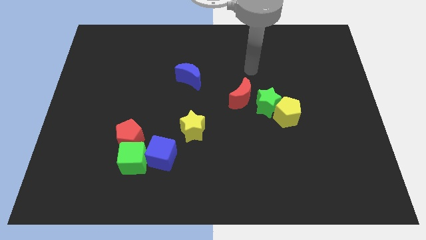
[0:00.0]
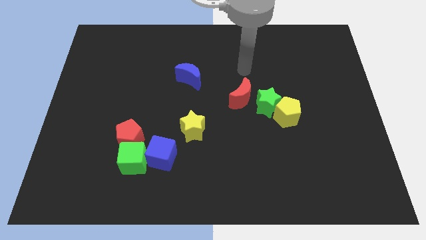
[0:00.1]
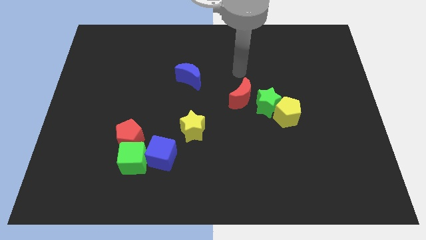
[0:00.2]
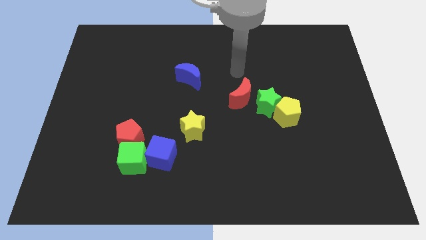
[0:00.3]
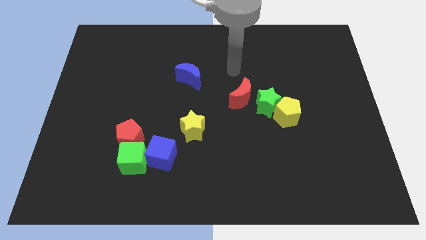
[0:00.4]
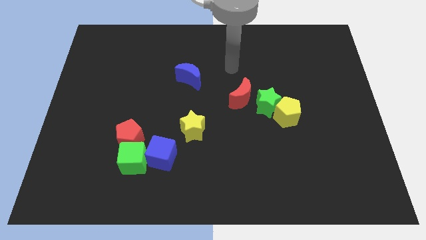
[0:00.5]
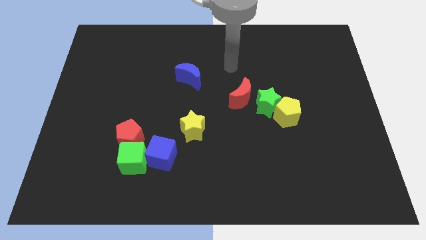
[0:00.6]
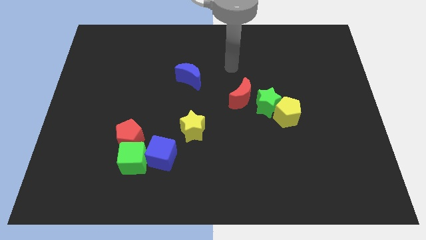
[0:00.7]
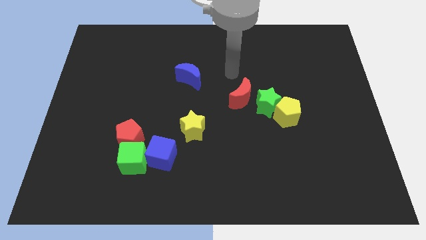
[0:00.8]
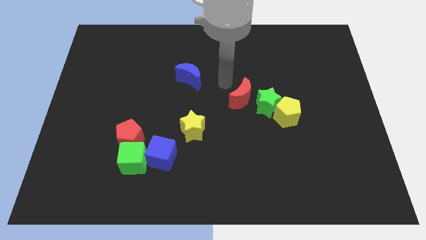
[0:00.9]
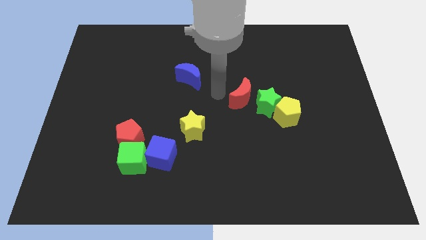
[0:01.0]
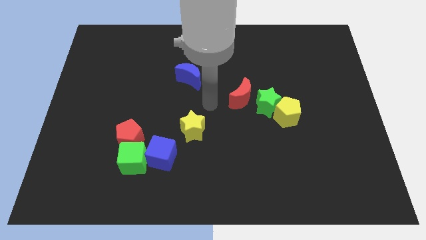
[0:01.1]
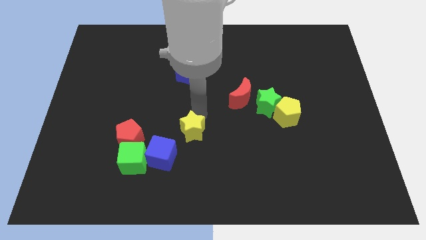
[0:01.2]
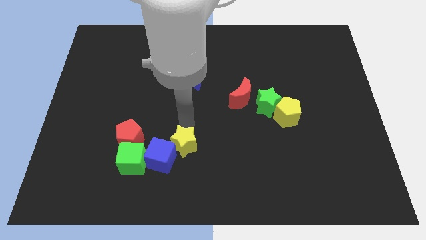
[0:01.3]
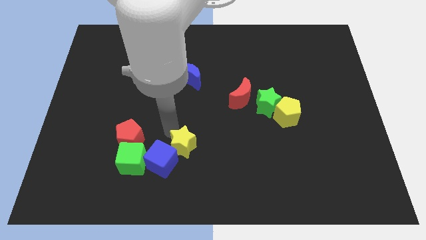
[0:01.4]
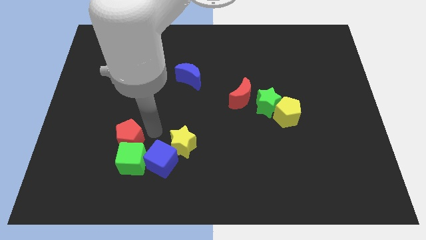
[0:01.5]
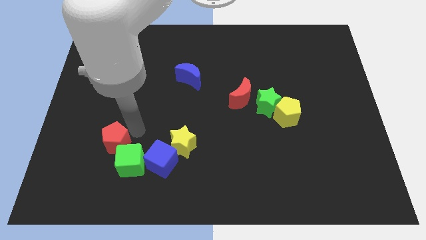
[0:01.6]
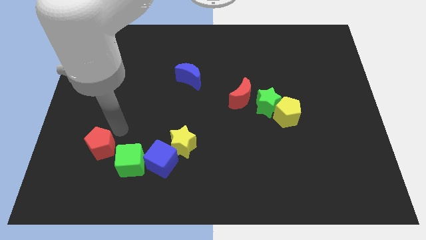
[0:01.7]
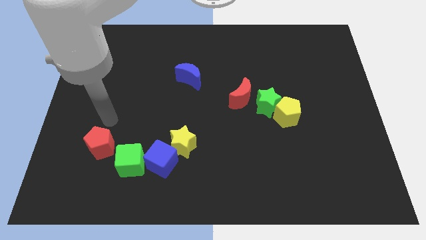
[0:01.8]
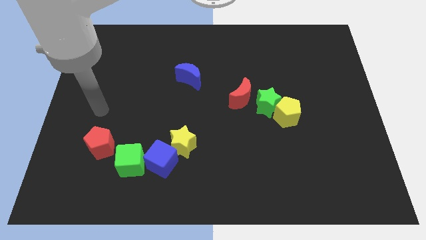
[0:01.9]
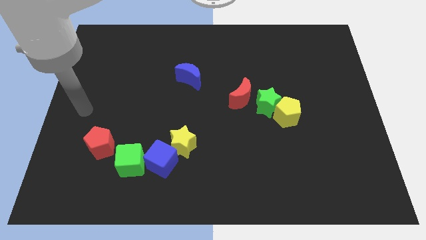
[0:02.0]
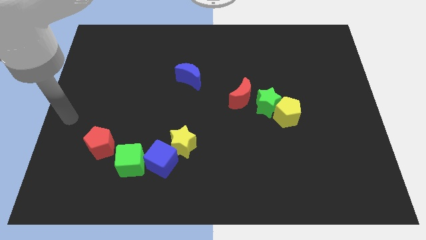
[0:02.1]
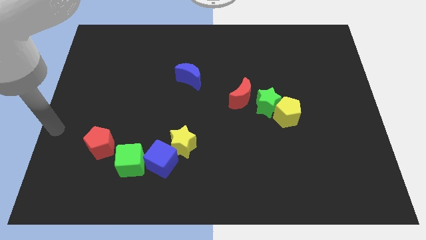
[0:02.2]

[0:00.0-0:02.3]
move red pentagon to the left of green cube

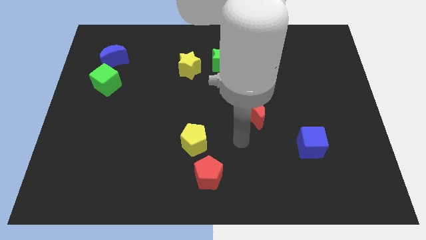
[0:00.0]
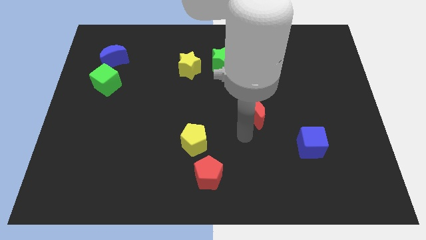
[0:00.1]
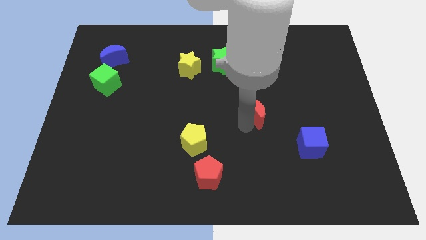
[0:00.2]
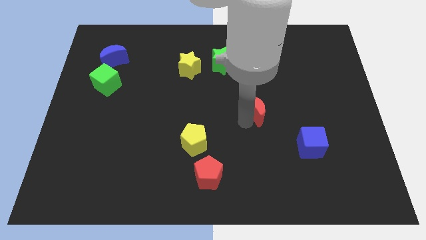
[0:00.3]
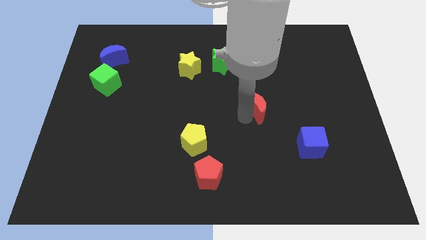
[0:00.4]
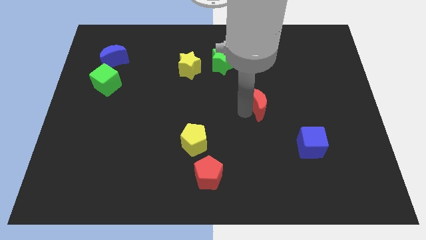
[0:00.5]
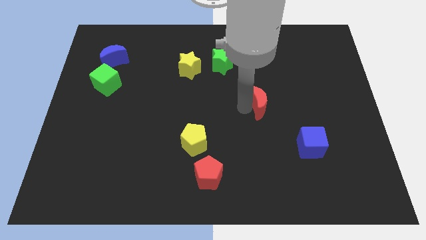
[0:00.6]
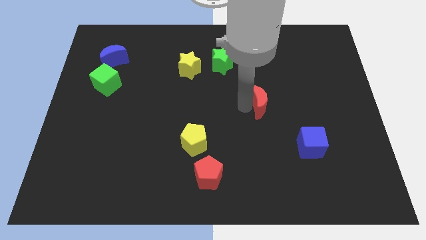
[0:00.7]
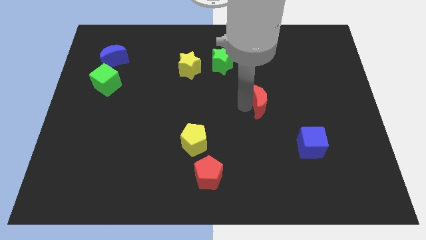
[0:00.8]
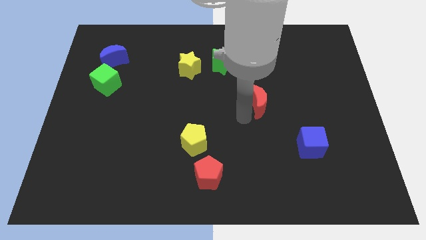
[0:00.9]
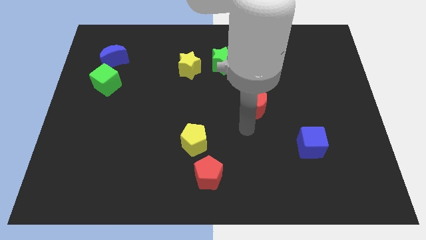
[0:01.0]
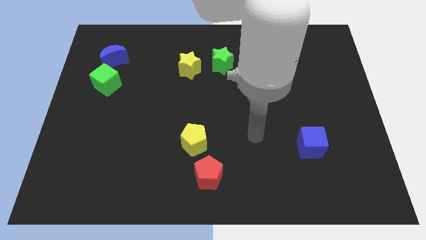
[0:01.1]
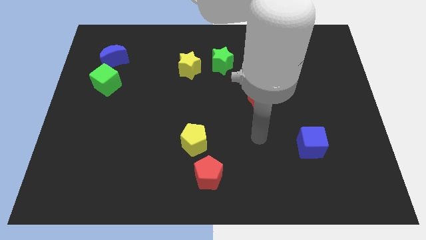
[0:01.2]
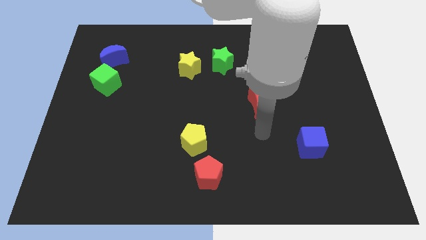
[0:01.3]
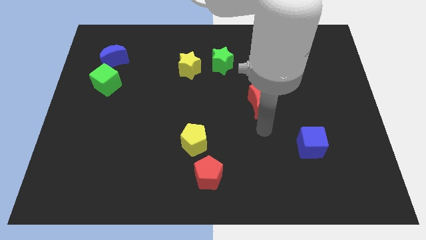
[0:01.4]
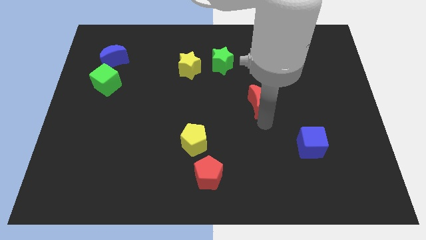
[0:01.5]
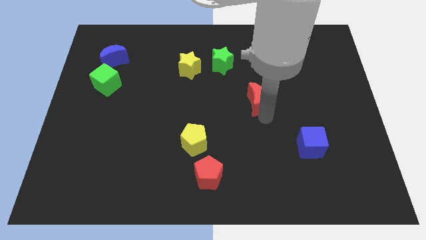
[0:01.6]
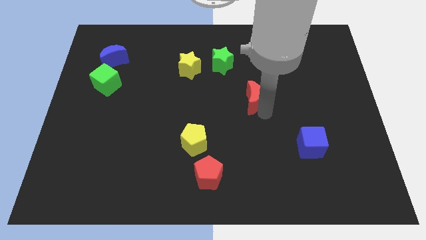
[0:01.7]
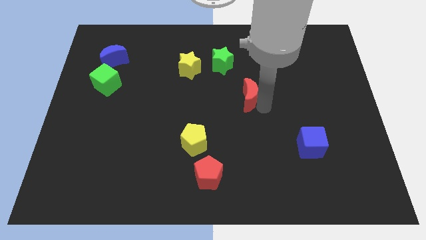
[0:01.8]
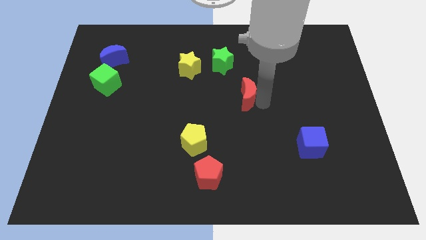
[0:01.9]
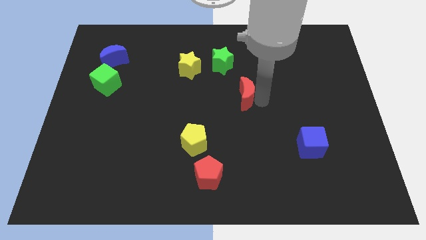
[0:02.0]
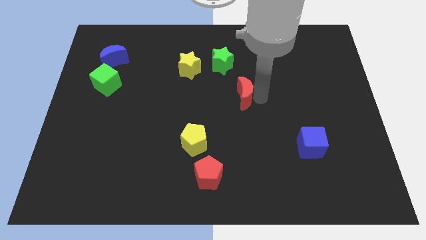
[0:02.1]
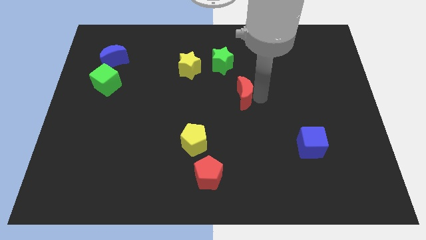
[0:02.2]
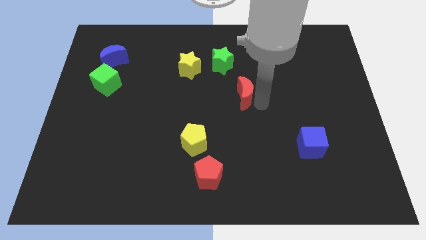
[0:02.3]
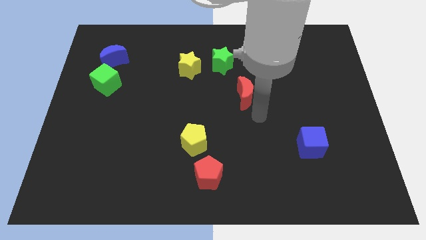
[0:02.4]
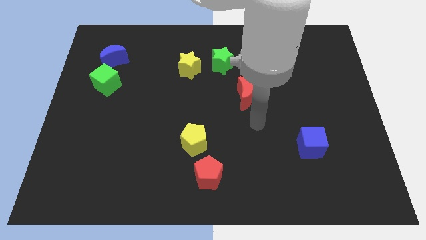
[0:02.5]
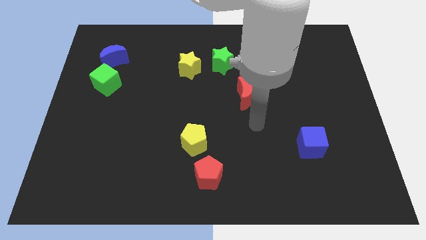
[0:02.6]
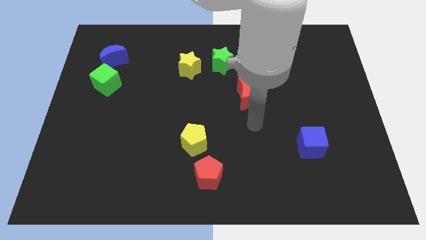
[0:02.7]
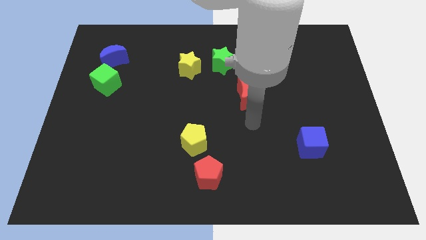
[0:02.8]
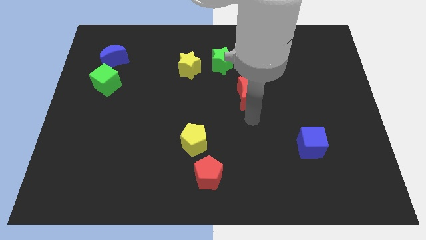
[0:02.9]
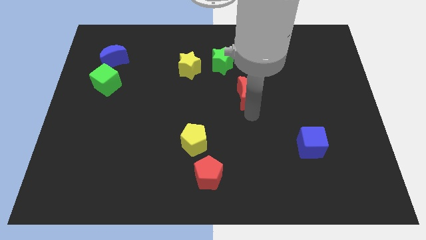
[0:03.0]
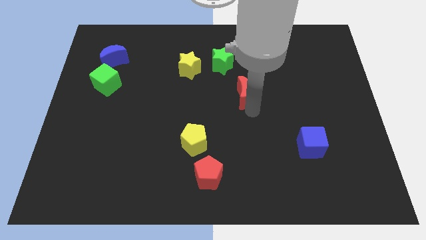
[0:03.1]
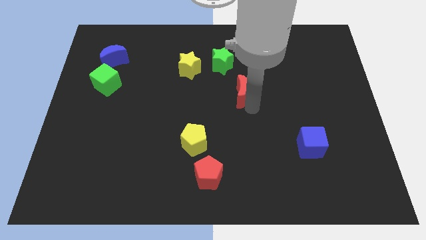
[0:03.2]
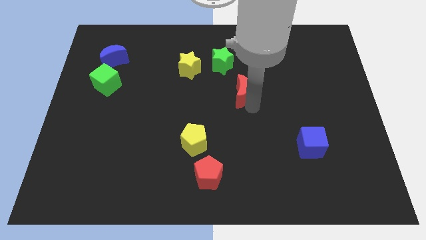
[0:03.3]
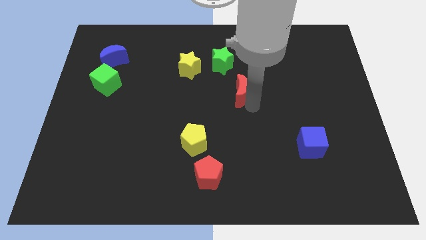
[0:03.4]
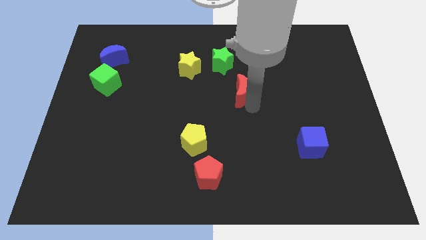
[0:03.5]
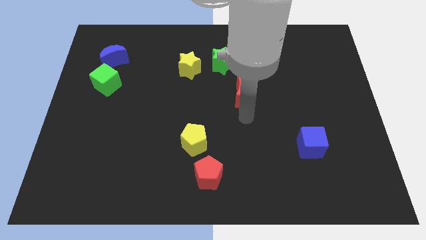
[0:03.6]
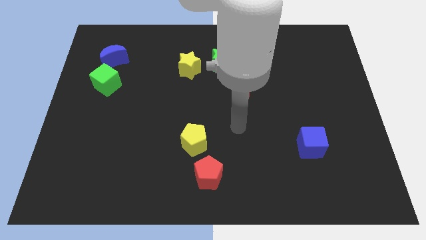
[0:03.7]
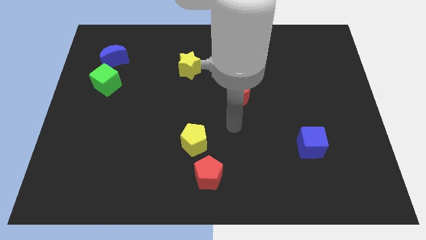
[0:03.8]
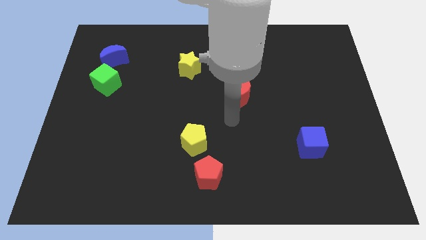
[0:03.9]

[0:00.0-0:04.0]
move the red crescent towards top

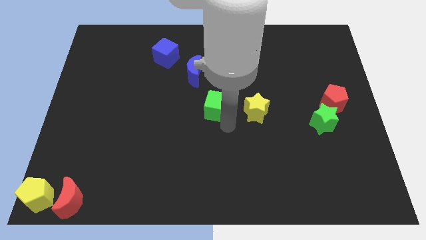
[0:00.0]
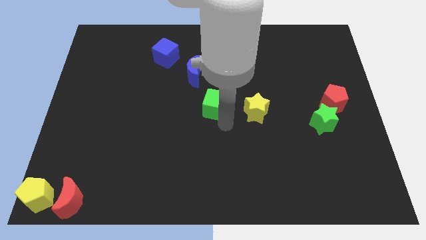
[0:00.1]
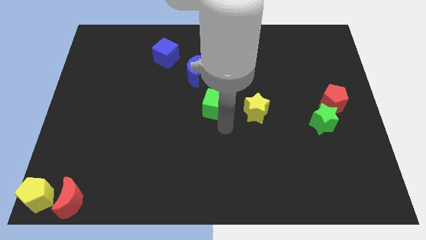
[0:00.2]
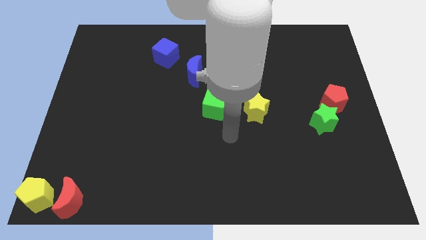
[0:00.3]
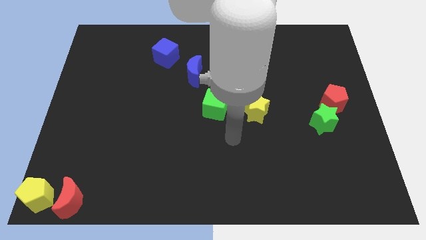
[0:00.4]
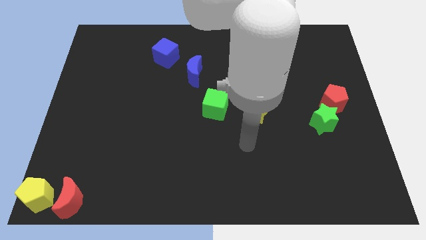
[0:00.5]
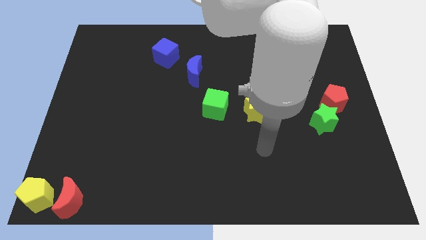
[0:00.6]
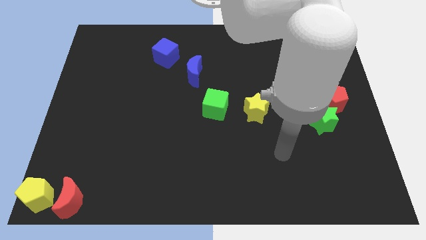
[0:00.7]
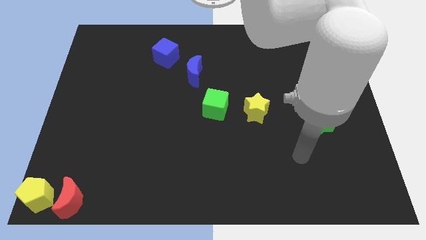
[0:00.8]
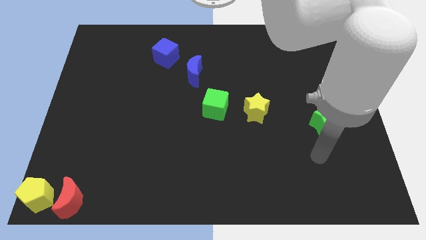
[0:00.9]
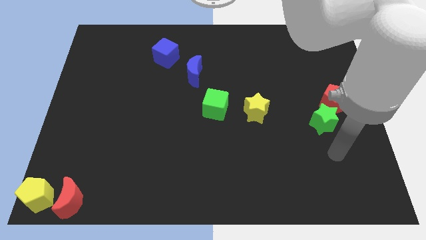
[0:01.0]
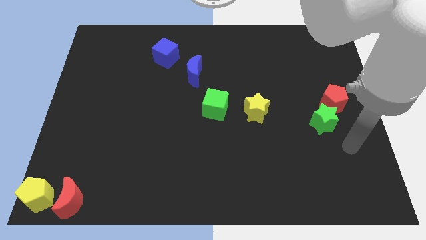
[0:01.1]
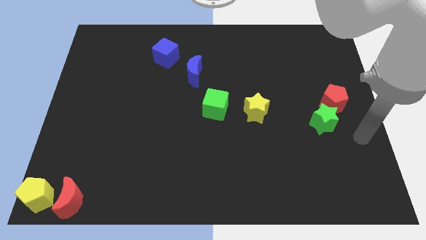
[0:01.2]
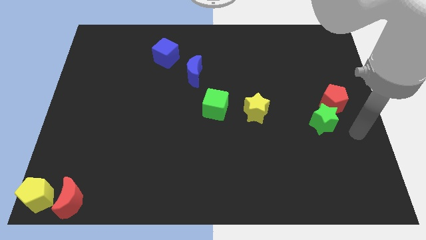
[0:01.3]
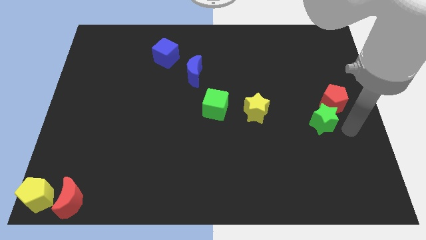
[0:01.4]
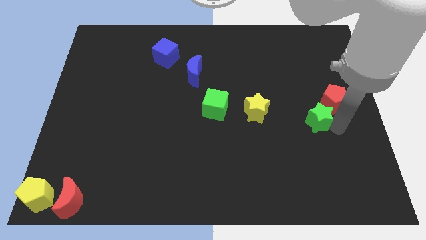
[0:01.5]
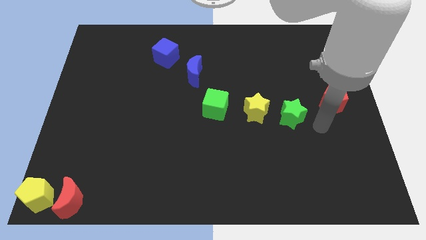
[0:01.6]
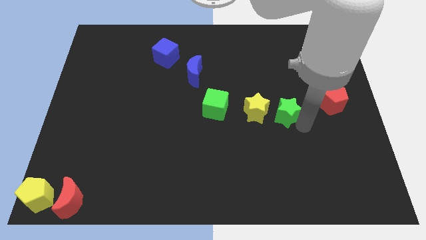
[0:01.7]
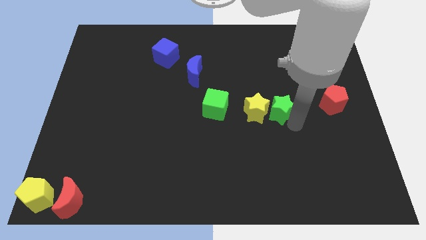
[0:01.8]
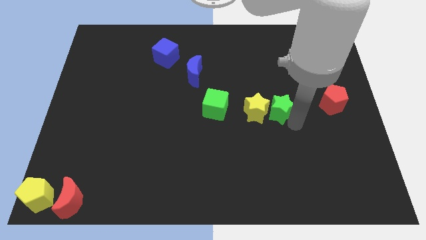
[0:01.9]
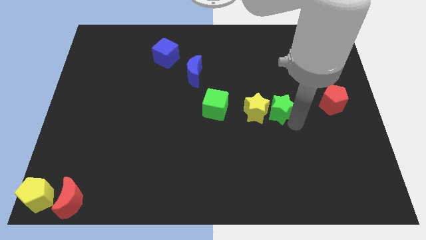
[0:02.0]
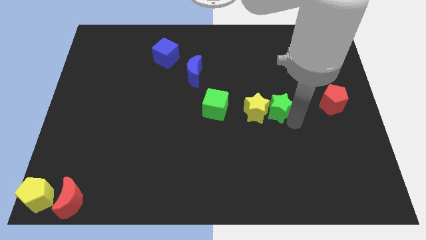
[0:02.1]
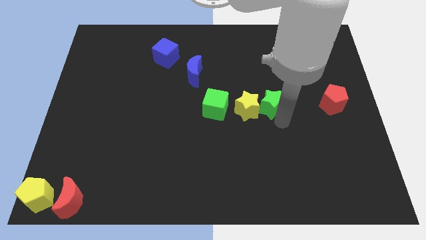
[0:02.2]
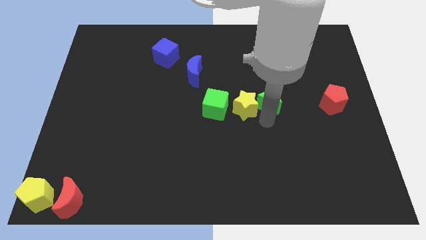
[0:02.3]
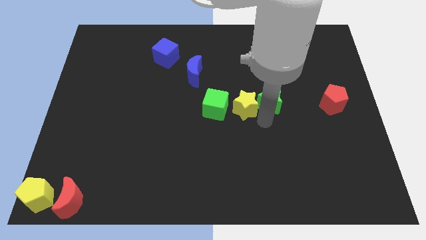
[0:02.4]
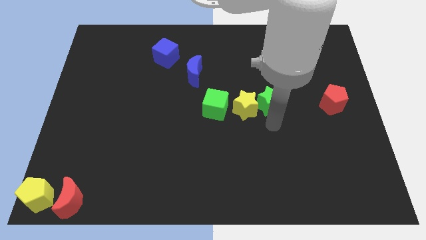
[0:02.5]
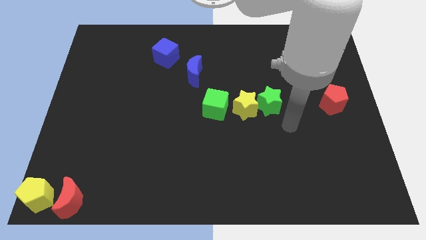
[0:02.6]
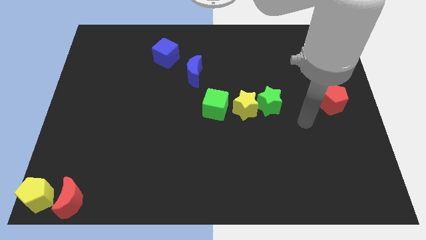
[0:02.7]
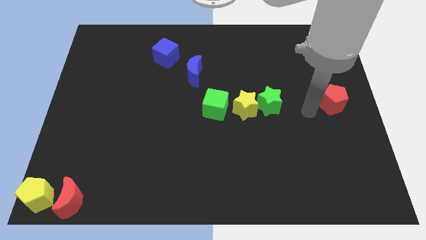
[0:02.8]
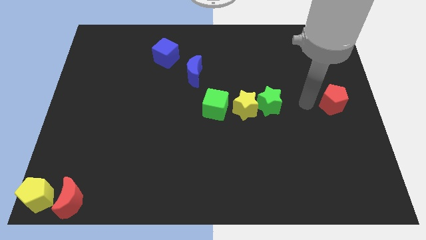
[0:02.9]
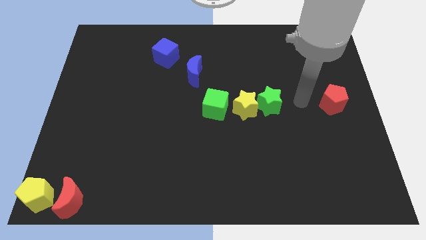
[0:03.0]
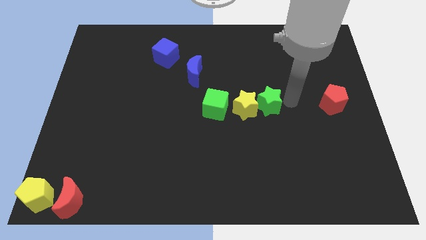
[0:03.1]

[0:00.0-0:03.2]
move the green star towards right to the yellow star
